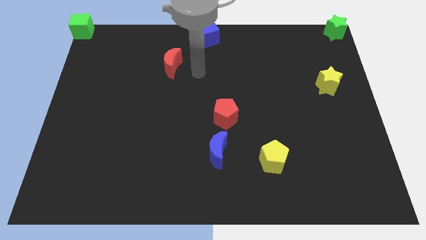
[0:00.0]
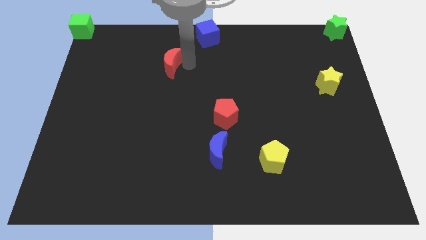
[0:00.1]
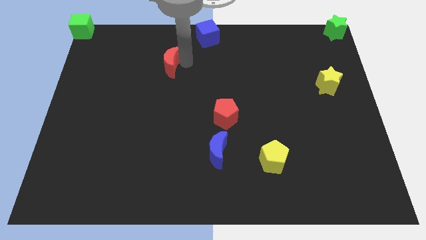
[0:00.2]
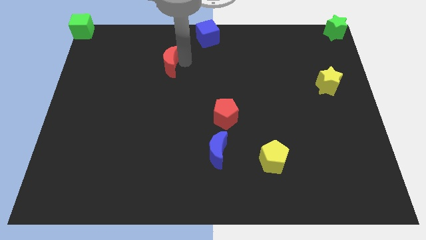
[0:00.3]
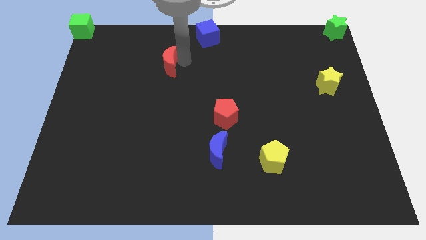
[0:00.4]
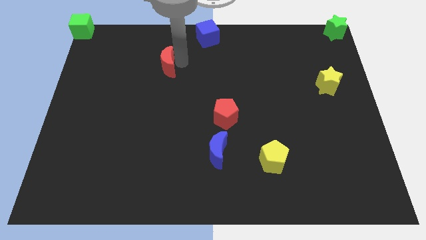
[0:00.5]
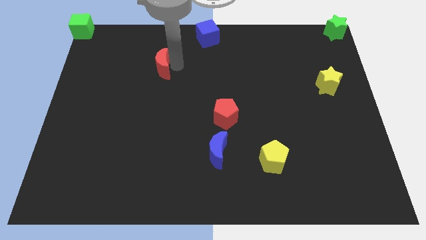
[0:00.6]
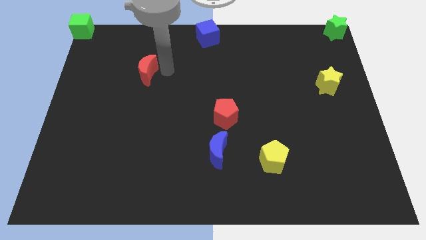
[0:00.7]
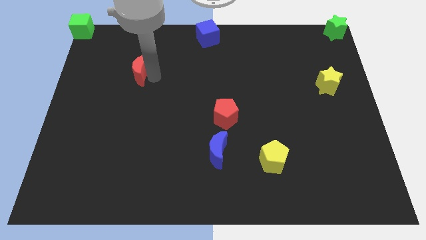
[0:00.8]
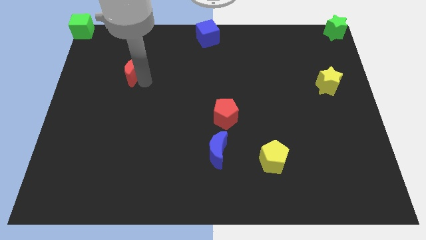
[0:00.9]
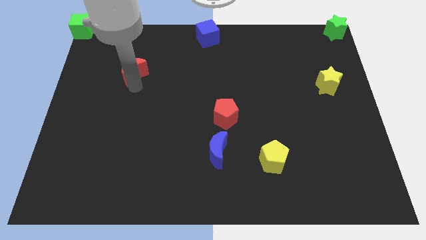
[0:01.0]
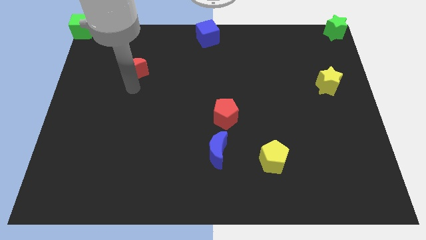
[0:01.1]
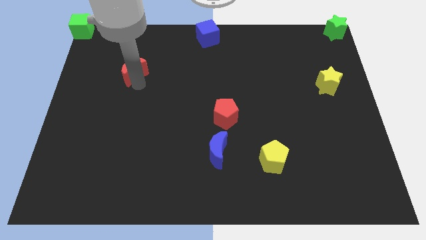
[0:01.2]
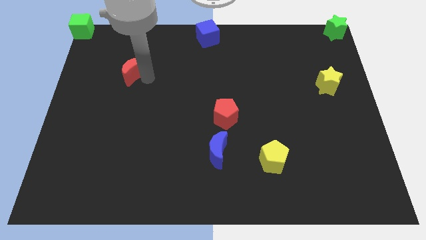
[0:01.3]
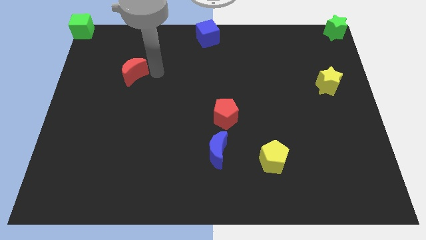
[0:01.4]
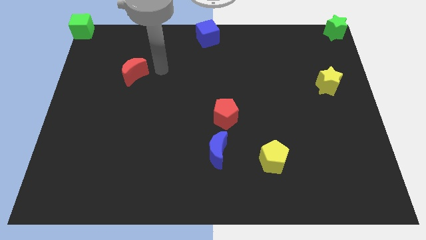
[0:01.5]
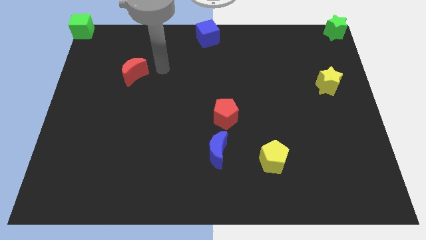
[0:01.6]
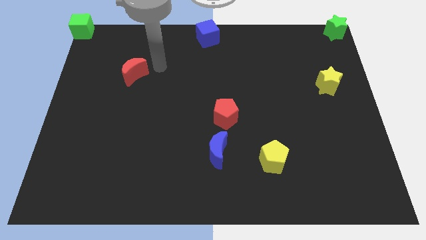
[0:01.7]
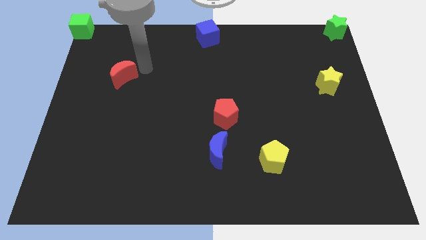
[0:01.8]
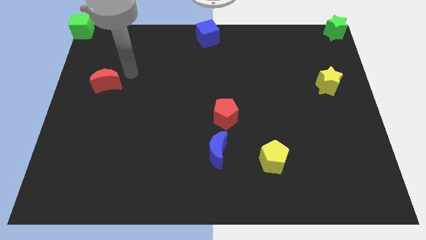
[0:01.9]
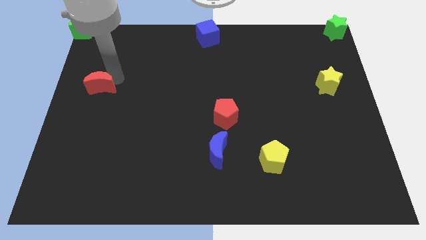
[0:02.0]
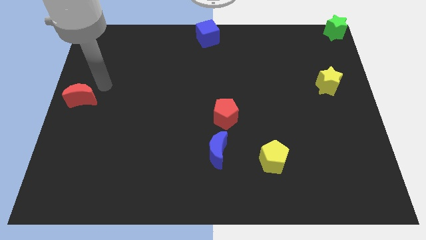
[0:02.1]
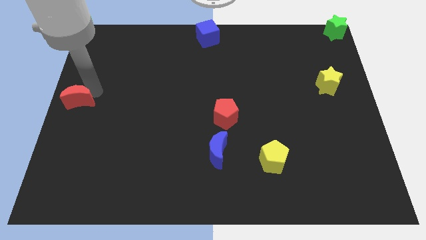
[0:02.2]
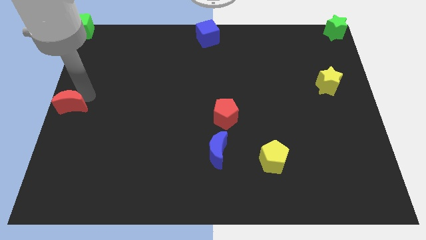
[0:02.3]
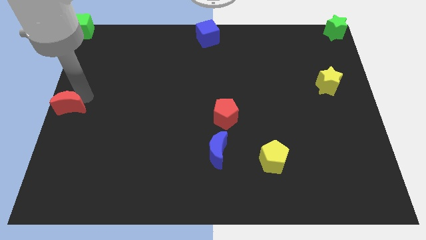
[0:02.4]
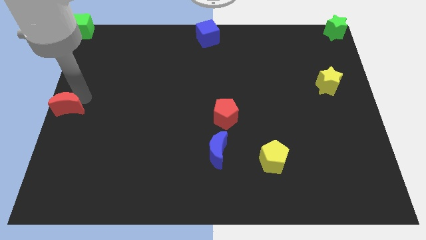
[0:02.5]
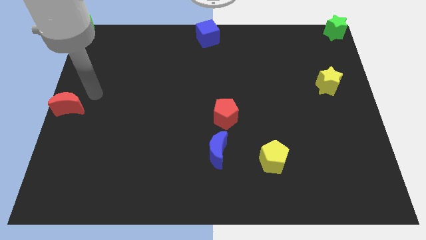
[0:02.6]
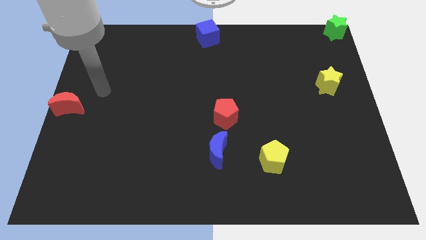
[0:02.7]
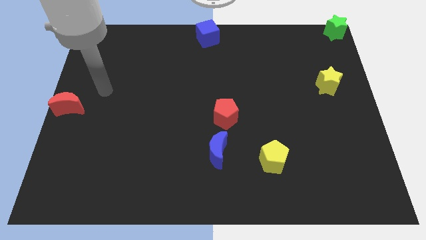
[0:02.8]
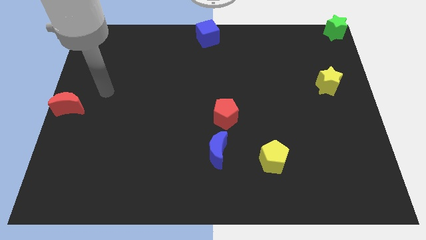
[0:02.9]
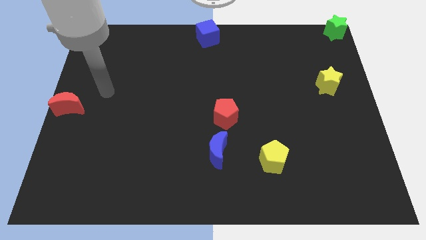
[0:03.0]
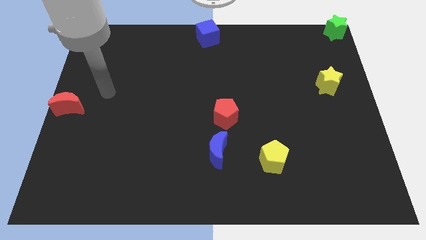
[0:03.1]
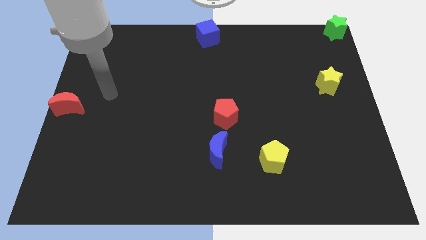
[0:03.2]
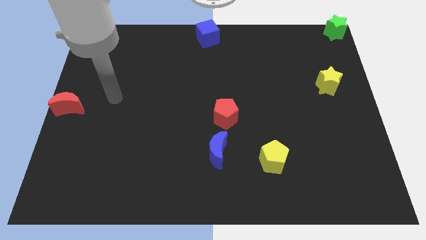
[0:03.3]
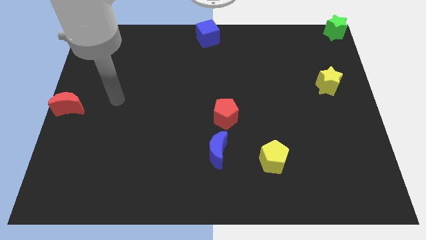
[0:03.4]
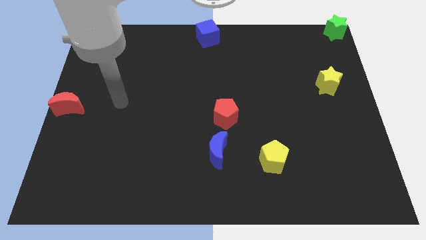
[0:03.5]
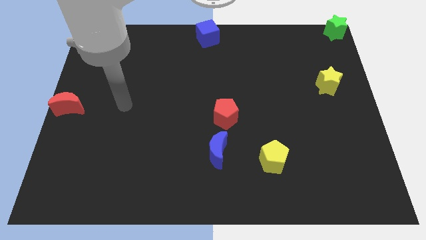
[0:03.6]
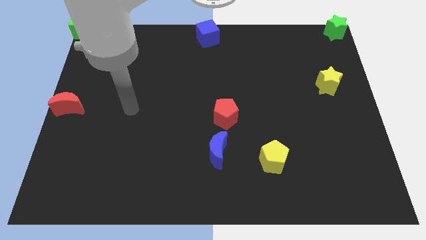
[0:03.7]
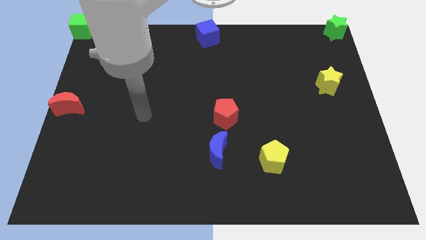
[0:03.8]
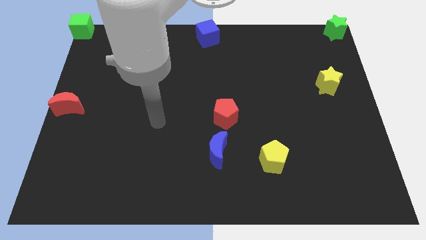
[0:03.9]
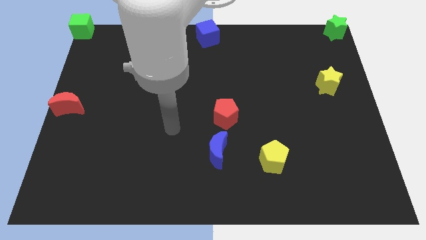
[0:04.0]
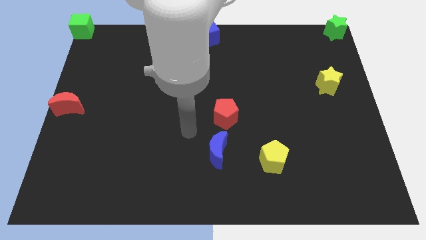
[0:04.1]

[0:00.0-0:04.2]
put the red moon vertically below the green cube

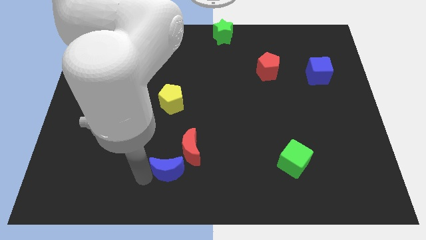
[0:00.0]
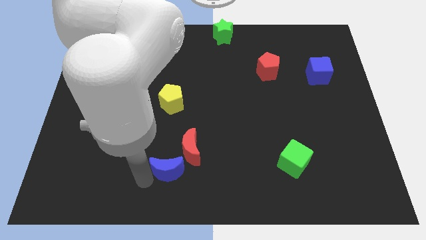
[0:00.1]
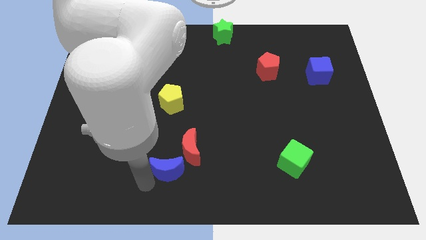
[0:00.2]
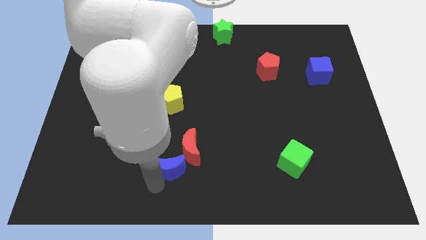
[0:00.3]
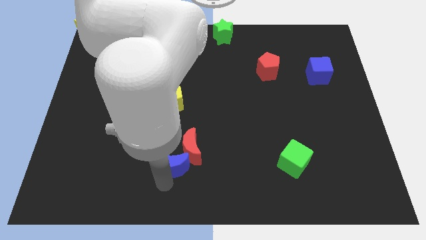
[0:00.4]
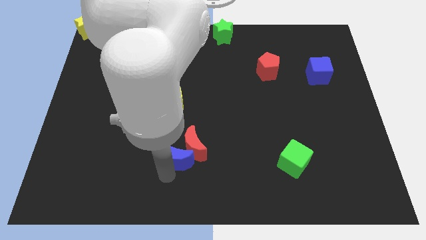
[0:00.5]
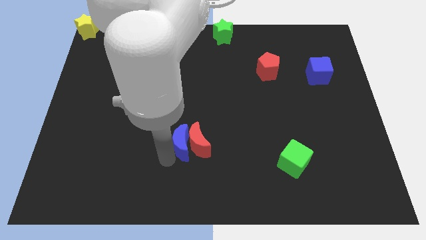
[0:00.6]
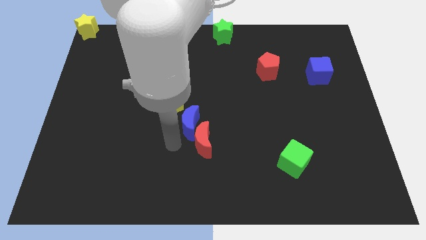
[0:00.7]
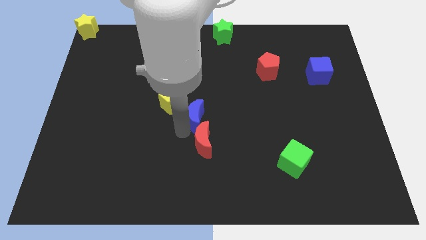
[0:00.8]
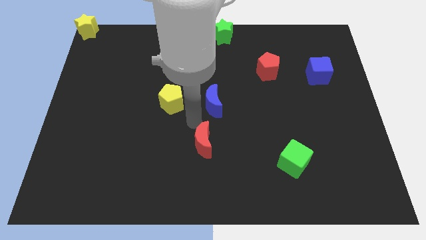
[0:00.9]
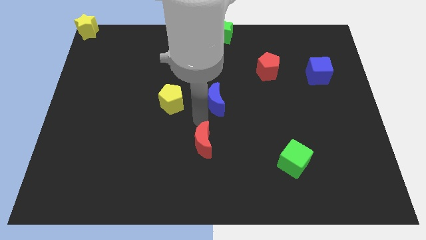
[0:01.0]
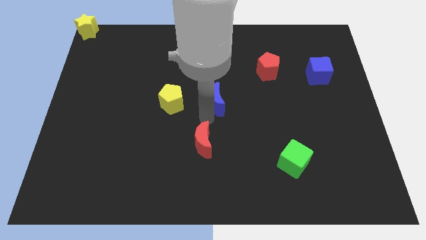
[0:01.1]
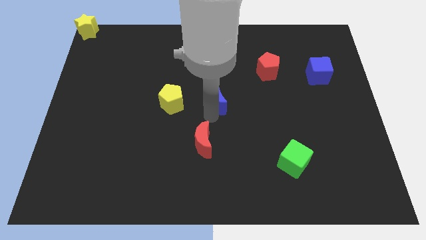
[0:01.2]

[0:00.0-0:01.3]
place blue moon to the right of yellow pentagon

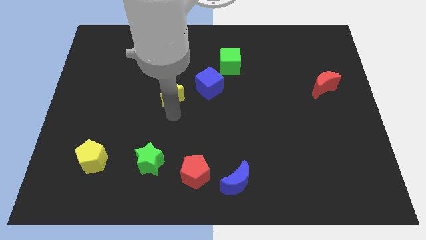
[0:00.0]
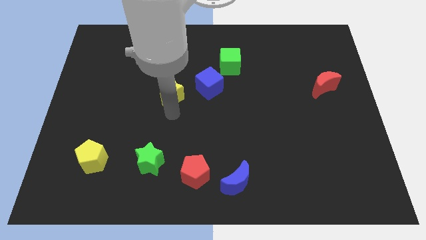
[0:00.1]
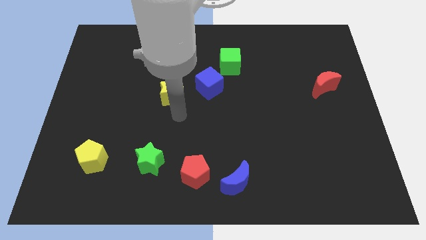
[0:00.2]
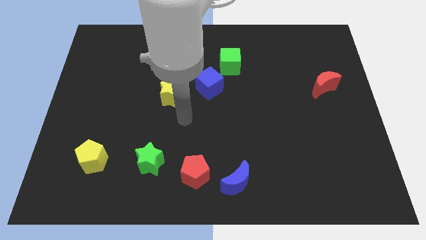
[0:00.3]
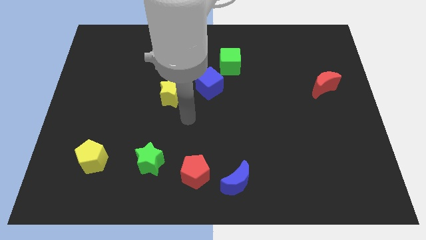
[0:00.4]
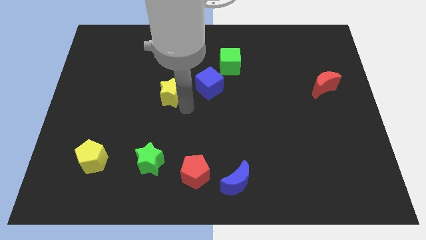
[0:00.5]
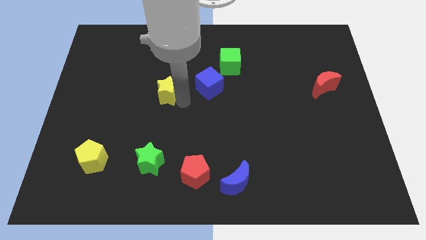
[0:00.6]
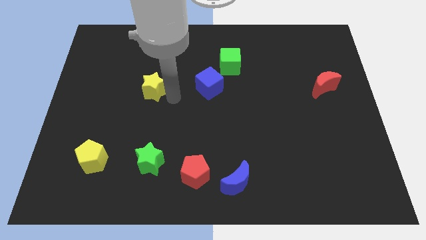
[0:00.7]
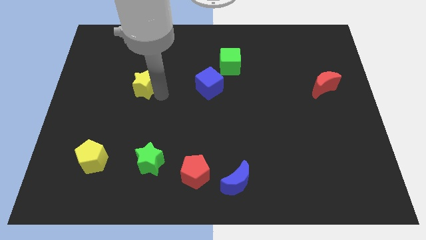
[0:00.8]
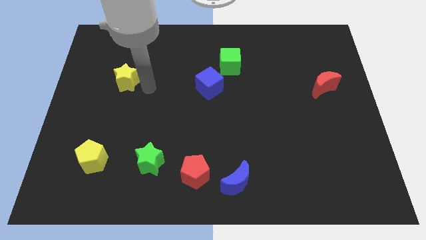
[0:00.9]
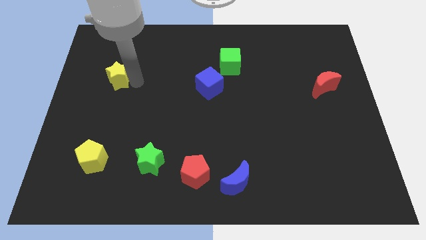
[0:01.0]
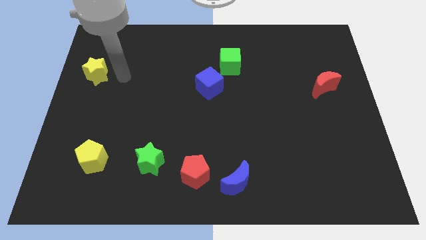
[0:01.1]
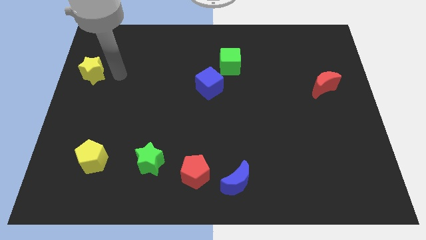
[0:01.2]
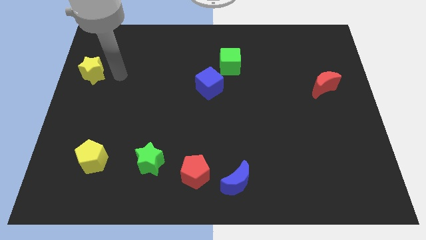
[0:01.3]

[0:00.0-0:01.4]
place the yellow star above the yellow pentagon

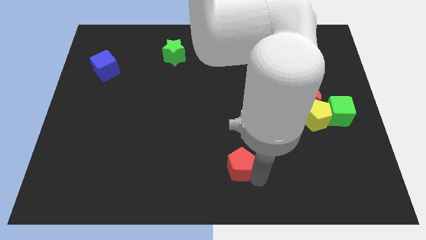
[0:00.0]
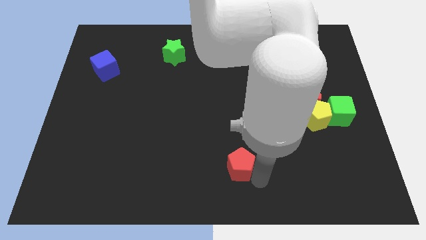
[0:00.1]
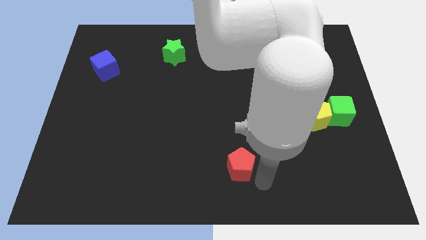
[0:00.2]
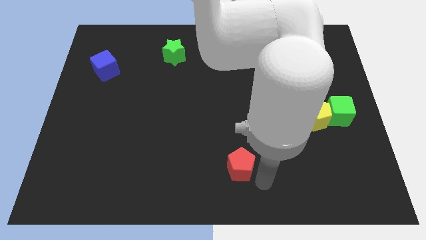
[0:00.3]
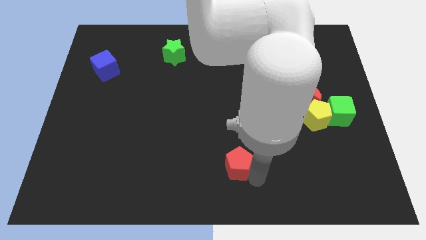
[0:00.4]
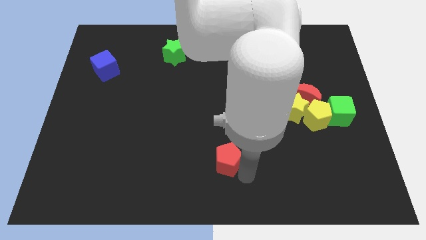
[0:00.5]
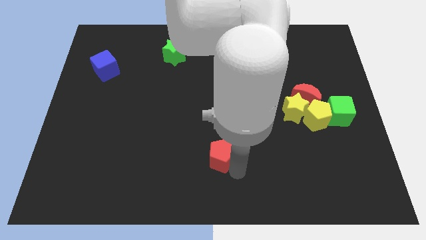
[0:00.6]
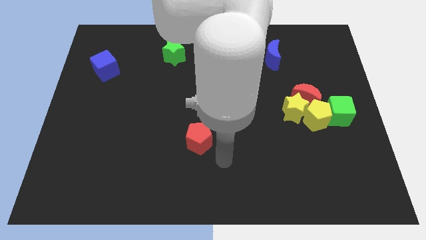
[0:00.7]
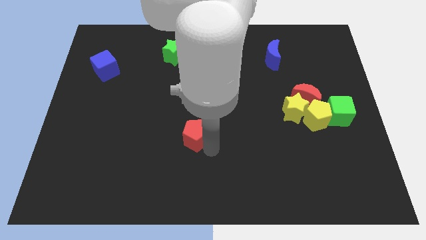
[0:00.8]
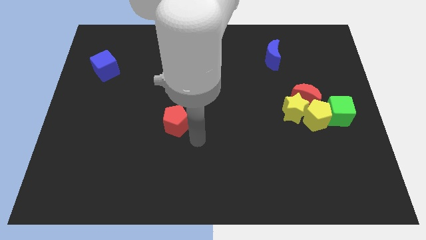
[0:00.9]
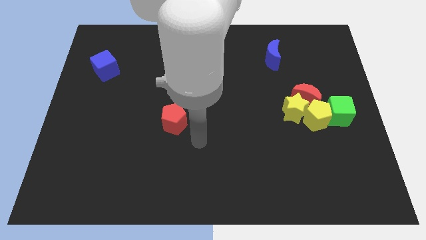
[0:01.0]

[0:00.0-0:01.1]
slide red pentagon towards the center left of the board

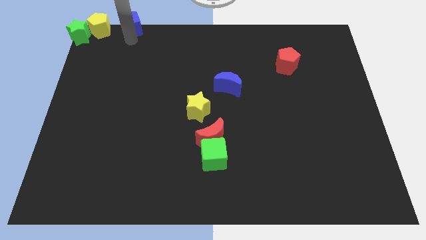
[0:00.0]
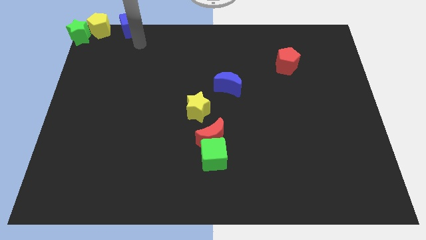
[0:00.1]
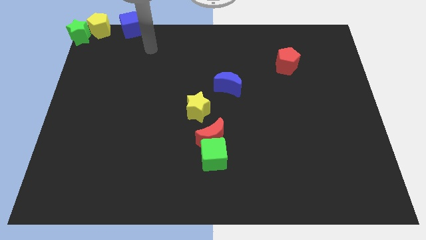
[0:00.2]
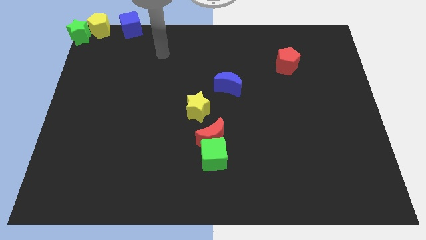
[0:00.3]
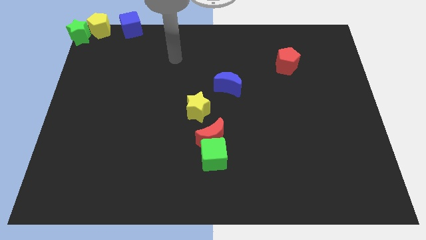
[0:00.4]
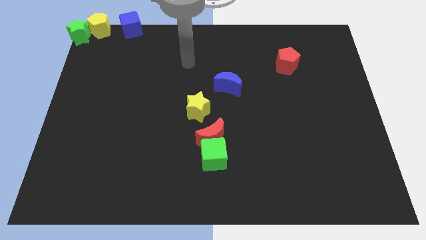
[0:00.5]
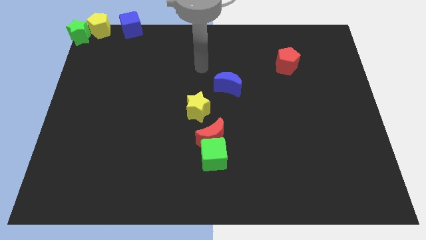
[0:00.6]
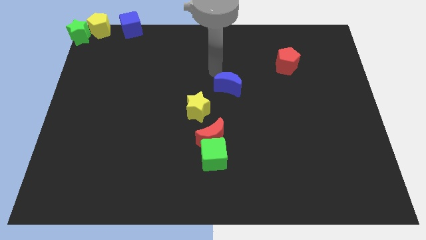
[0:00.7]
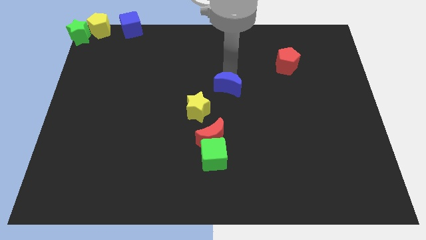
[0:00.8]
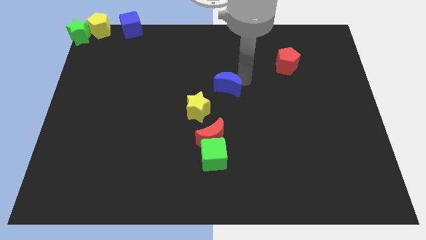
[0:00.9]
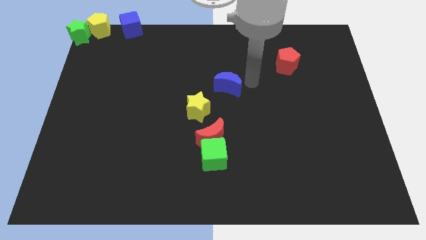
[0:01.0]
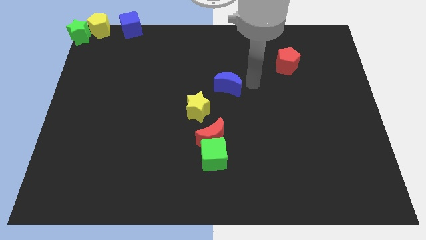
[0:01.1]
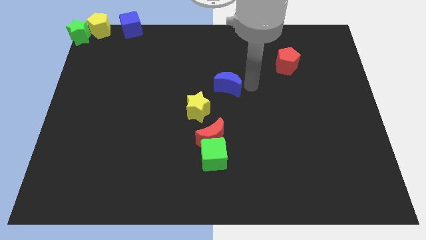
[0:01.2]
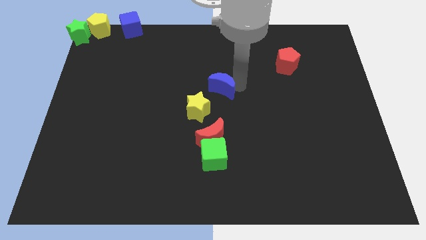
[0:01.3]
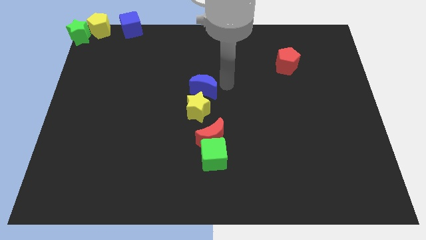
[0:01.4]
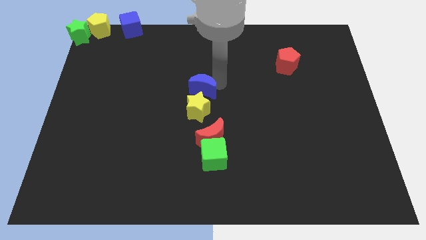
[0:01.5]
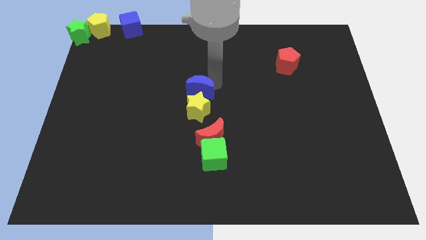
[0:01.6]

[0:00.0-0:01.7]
move the blue crescent slightly to the left
